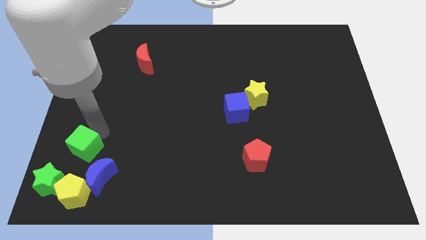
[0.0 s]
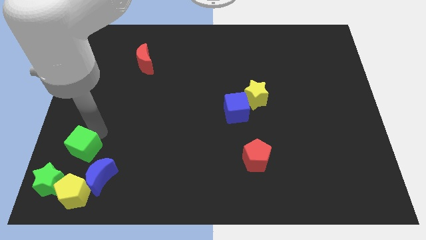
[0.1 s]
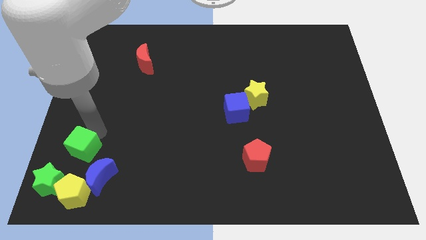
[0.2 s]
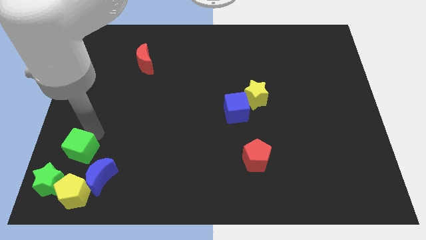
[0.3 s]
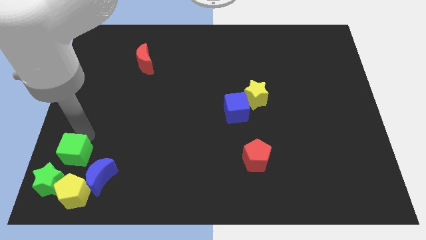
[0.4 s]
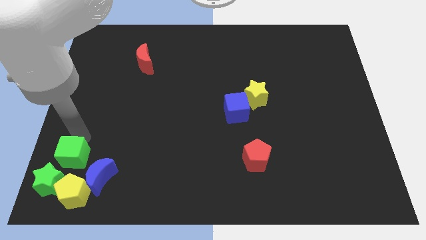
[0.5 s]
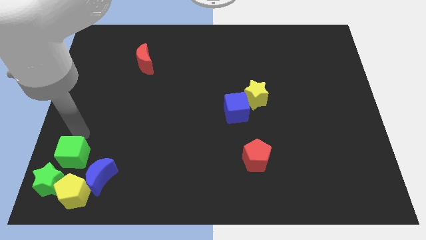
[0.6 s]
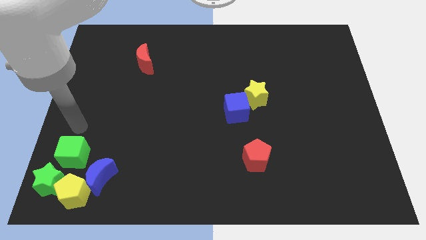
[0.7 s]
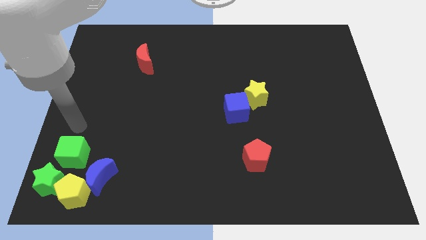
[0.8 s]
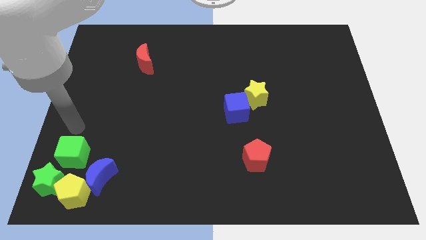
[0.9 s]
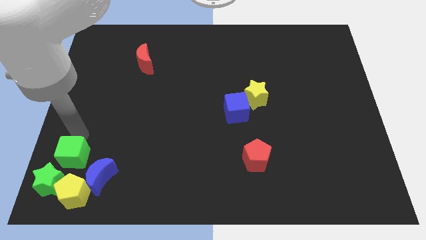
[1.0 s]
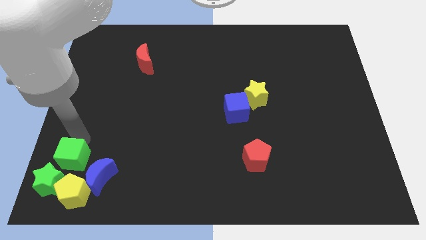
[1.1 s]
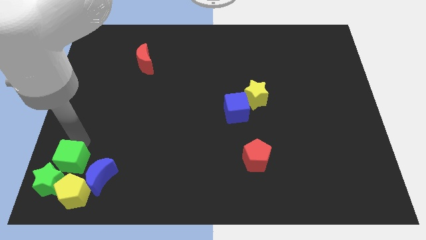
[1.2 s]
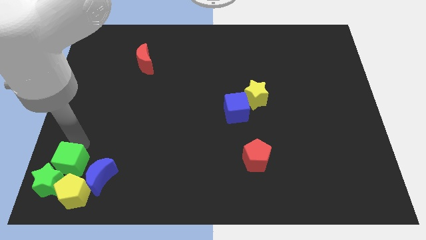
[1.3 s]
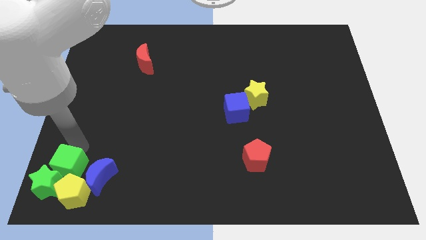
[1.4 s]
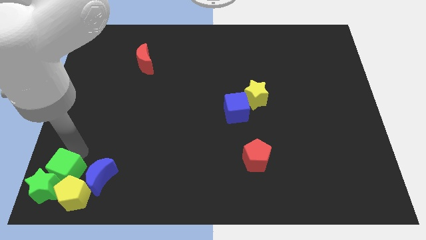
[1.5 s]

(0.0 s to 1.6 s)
push the green cube into the green star and yellow pentagon

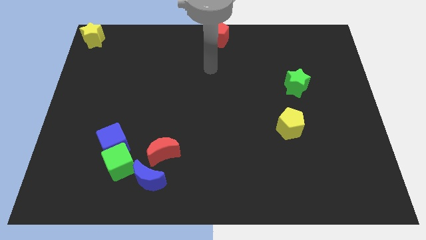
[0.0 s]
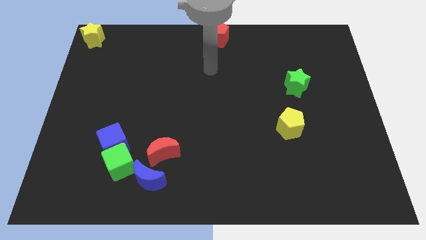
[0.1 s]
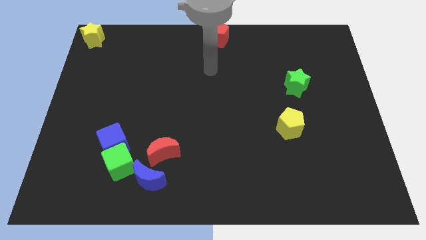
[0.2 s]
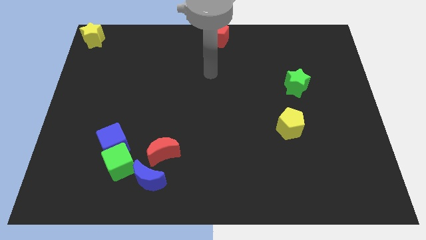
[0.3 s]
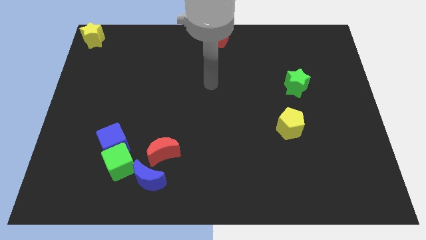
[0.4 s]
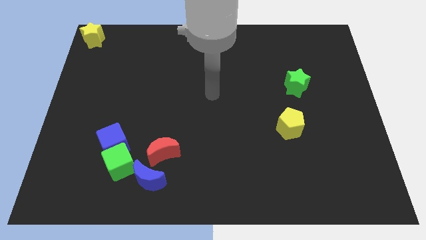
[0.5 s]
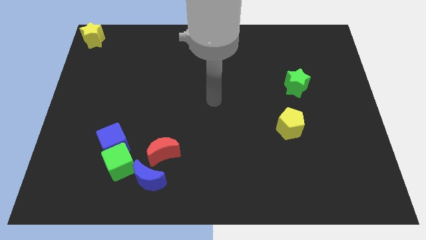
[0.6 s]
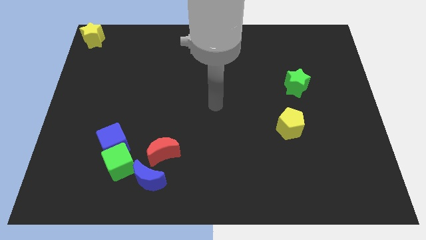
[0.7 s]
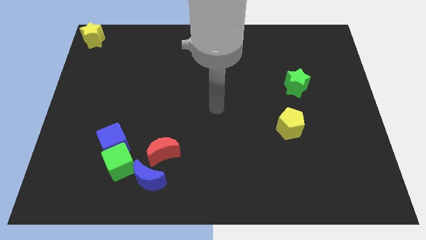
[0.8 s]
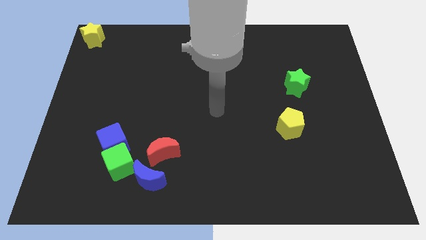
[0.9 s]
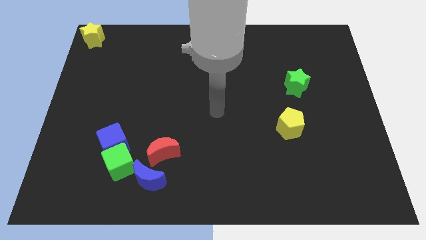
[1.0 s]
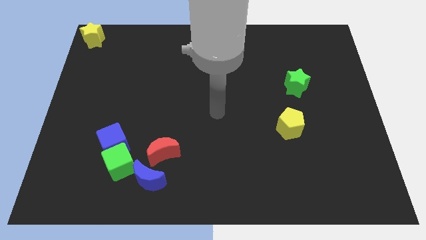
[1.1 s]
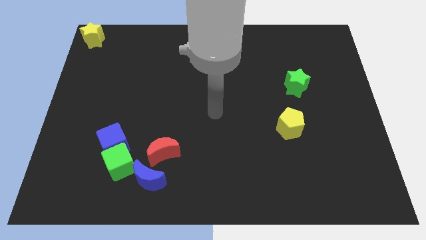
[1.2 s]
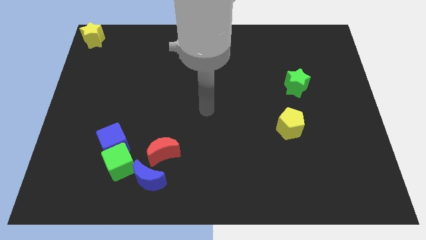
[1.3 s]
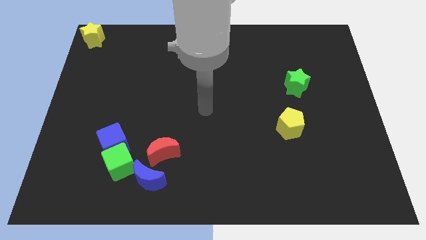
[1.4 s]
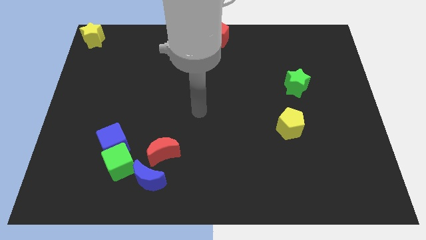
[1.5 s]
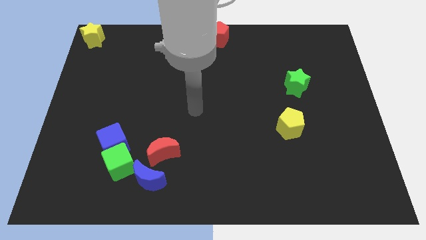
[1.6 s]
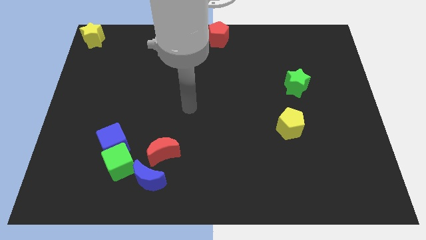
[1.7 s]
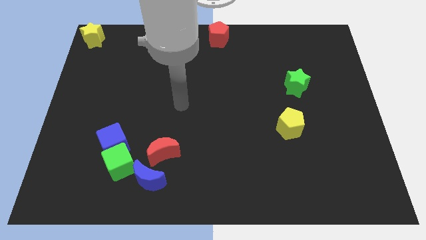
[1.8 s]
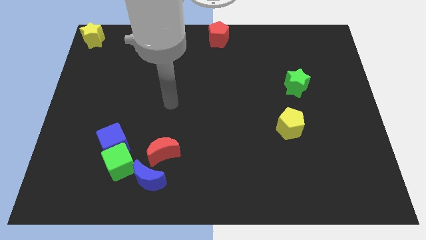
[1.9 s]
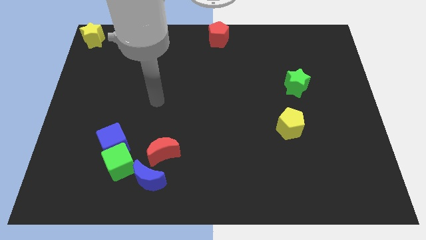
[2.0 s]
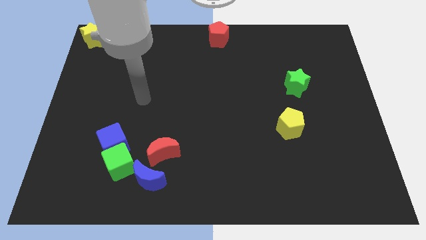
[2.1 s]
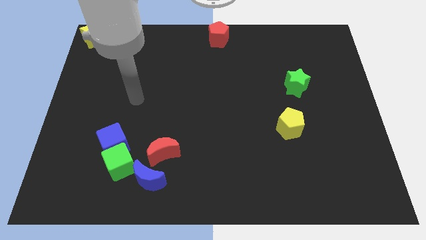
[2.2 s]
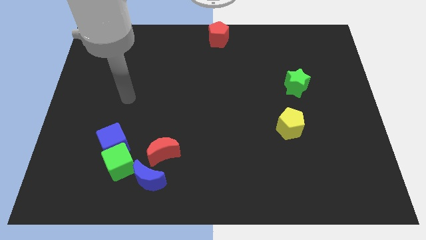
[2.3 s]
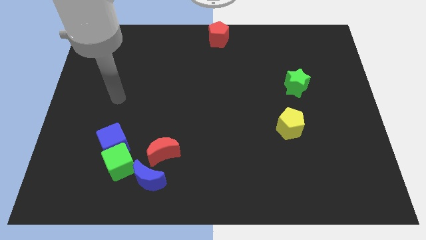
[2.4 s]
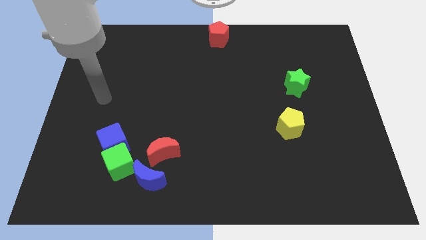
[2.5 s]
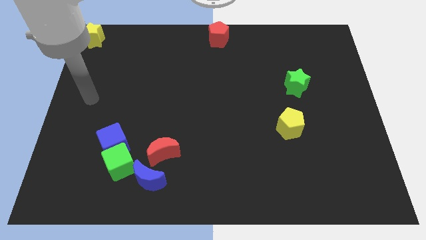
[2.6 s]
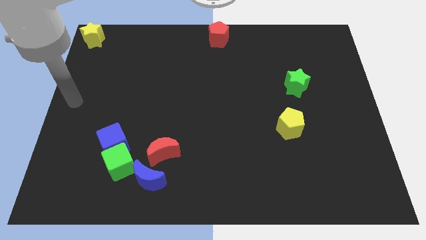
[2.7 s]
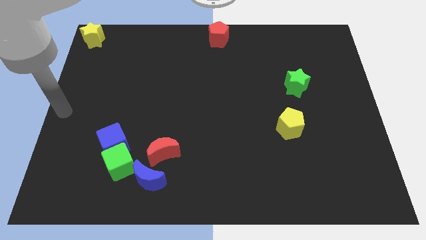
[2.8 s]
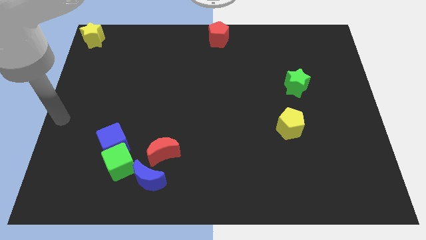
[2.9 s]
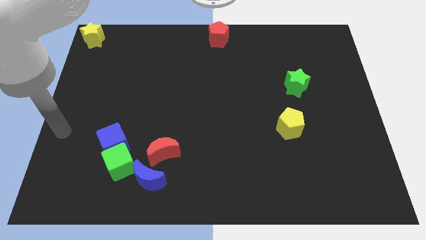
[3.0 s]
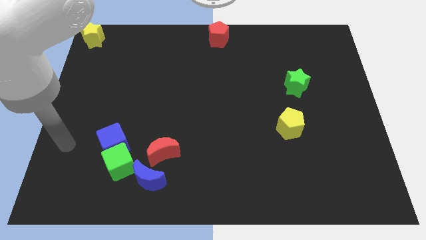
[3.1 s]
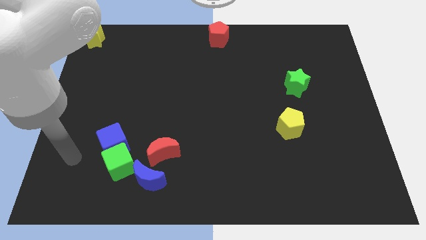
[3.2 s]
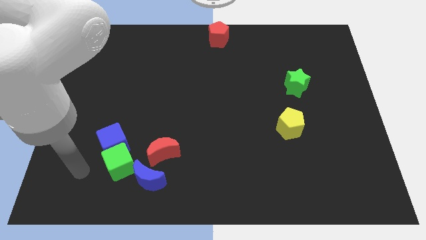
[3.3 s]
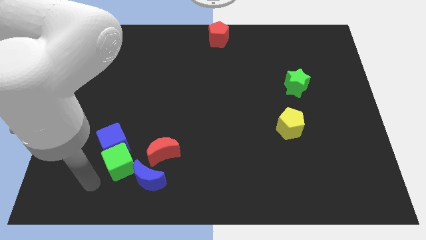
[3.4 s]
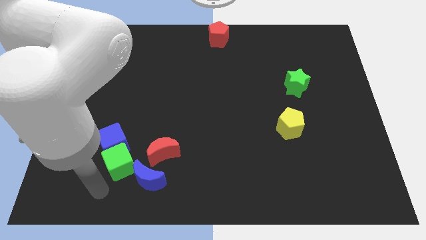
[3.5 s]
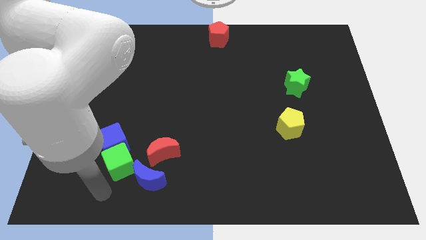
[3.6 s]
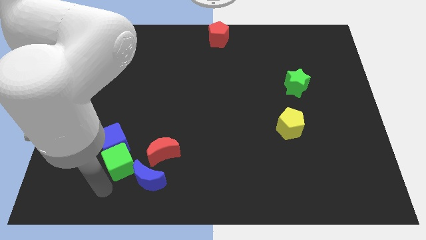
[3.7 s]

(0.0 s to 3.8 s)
point your arm below the green cube

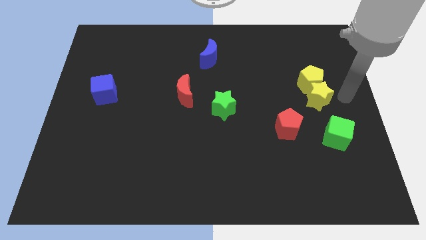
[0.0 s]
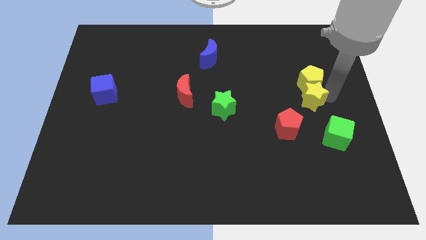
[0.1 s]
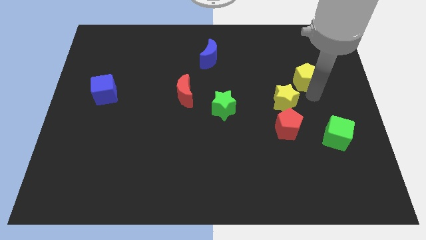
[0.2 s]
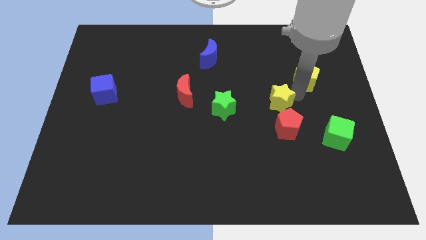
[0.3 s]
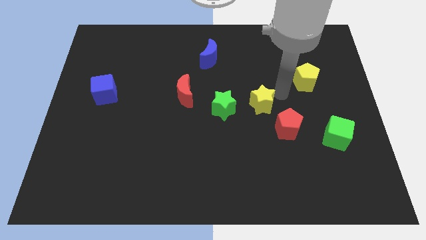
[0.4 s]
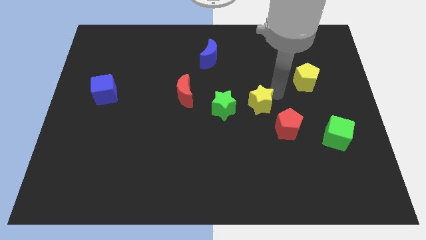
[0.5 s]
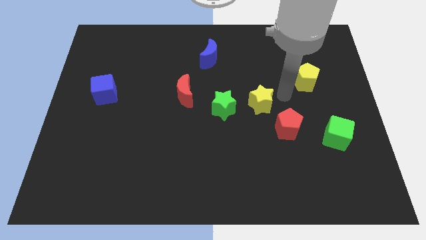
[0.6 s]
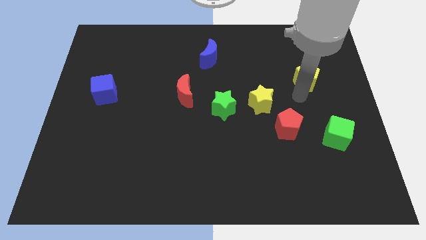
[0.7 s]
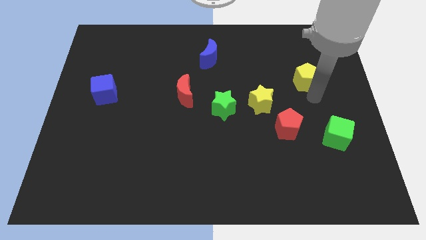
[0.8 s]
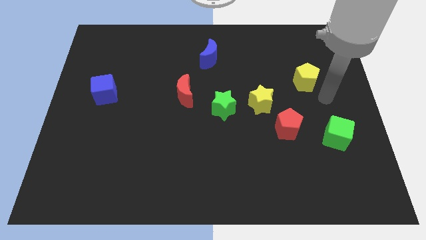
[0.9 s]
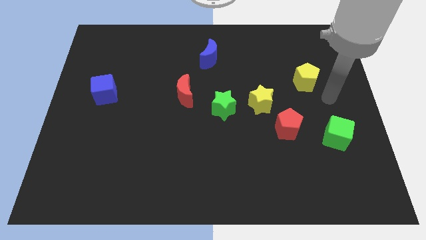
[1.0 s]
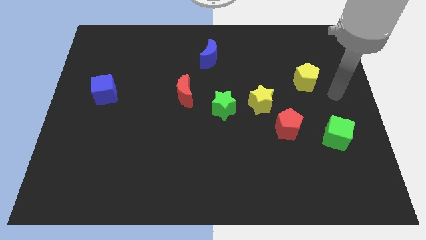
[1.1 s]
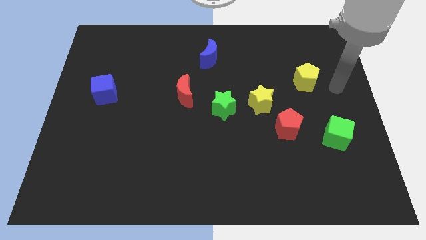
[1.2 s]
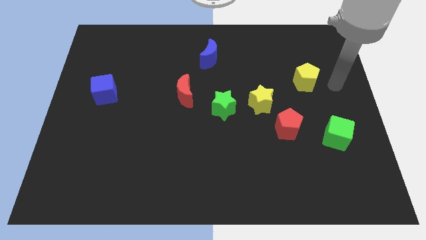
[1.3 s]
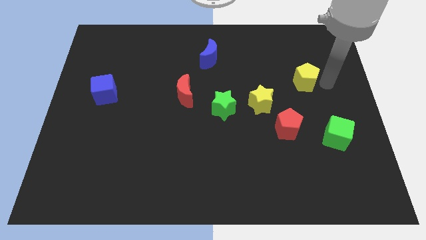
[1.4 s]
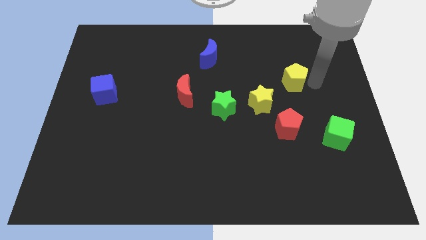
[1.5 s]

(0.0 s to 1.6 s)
push the yellow star to the center of the board

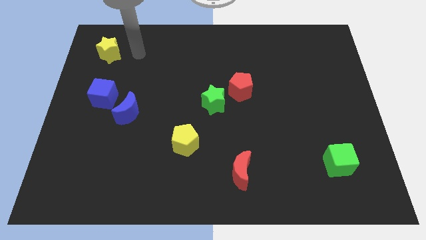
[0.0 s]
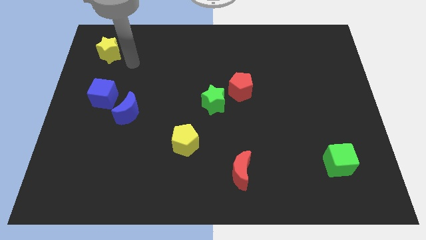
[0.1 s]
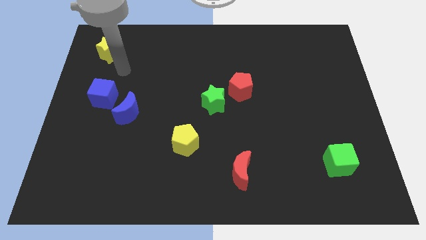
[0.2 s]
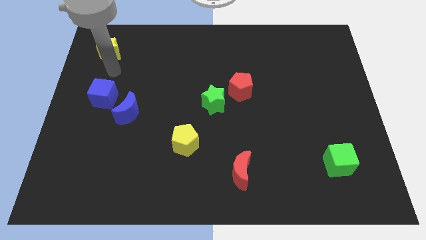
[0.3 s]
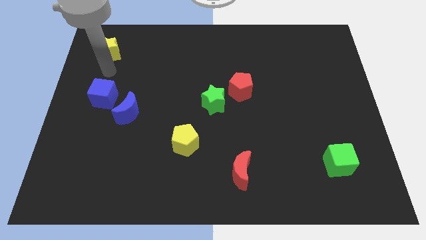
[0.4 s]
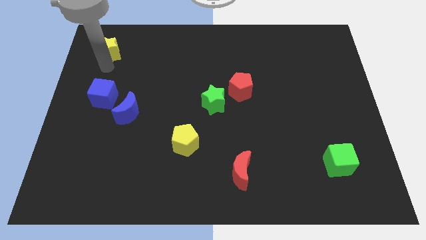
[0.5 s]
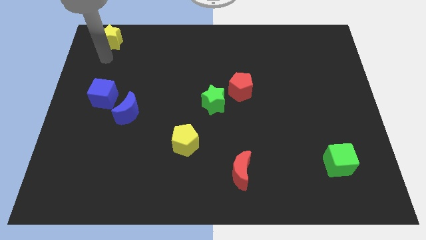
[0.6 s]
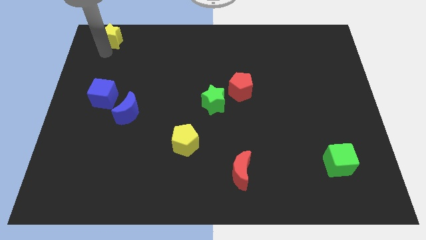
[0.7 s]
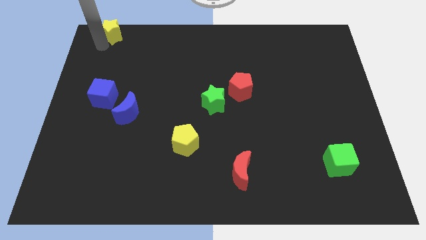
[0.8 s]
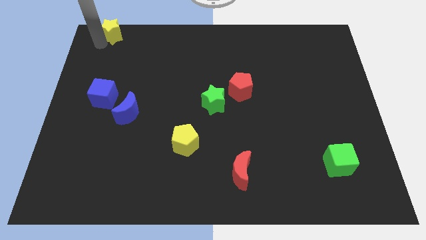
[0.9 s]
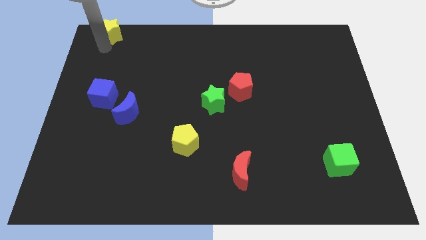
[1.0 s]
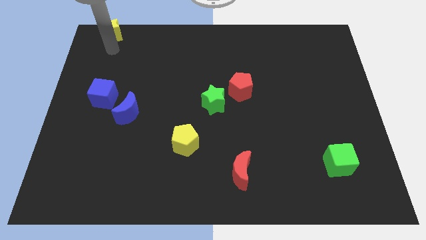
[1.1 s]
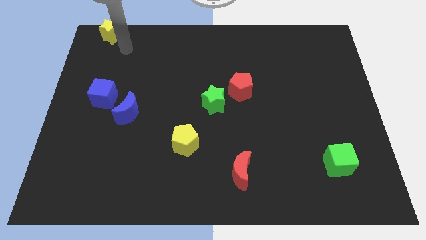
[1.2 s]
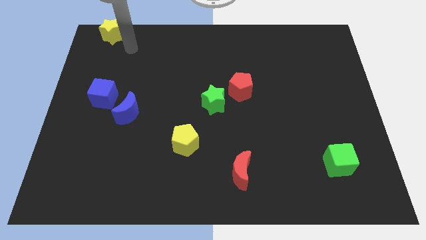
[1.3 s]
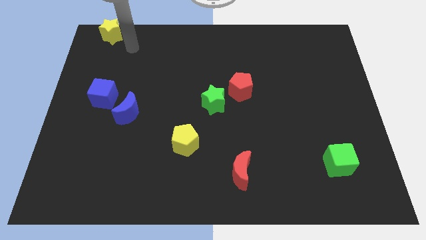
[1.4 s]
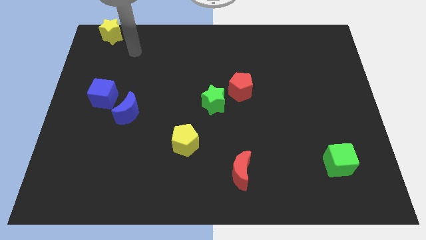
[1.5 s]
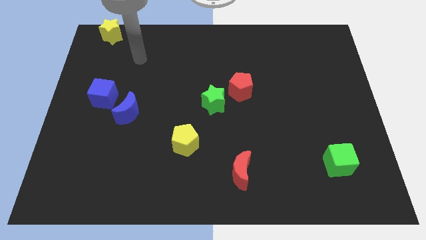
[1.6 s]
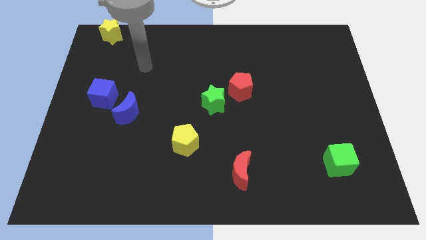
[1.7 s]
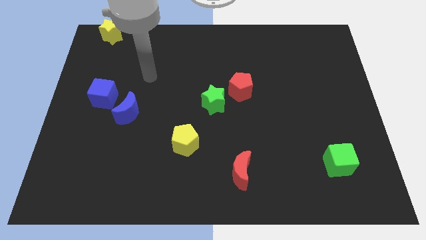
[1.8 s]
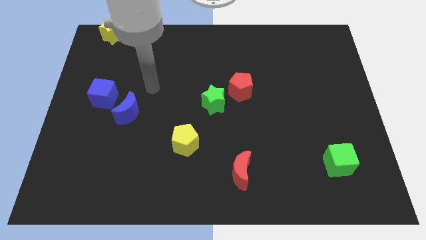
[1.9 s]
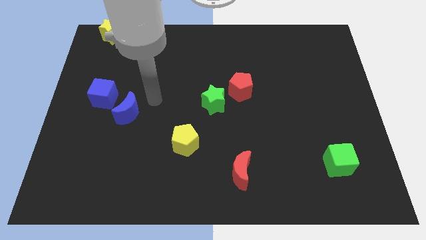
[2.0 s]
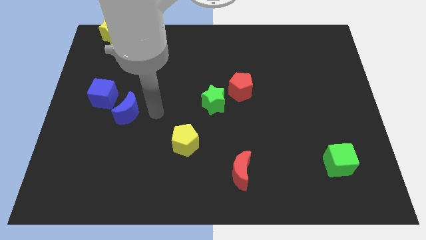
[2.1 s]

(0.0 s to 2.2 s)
move the yellow star towards the top left of the board
